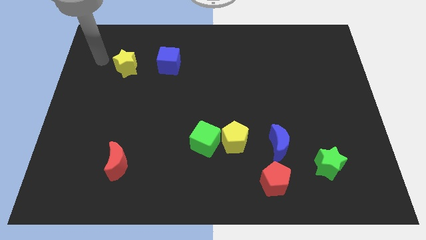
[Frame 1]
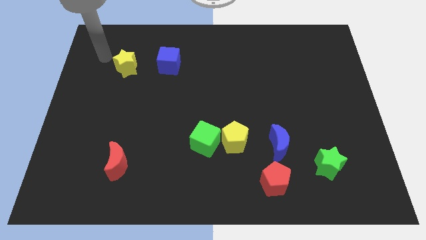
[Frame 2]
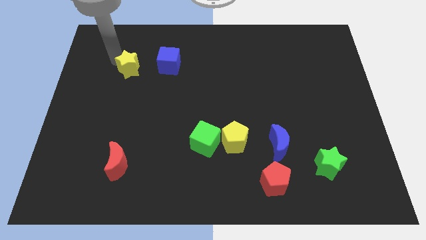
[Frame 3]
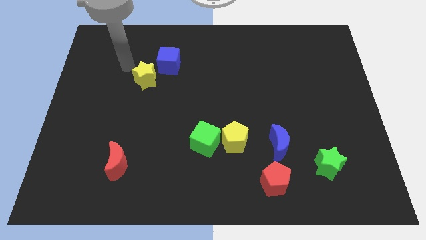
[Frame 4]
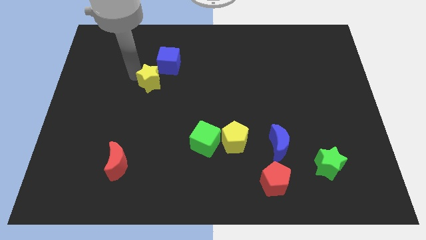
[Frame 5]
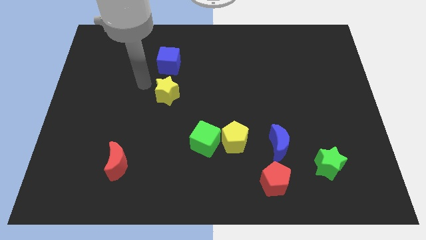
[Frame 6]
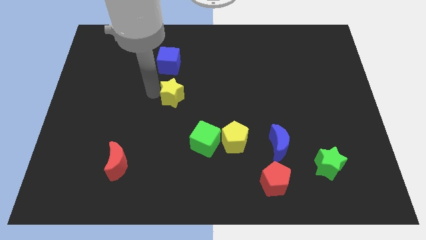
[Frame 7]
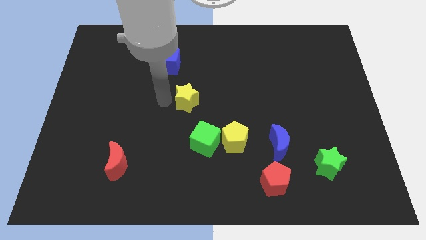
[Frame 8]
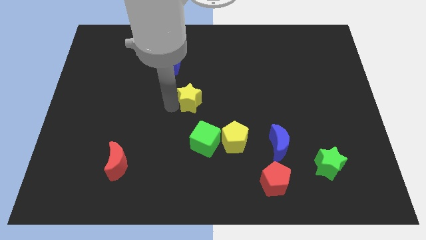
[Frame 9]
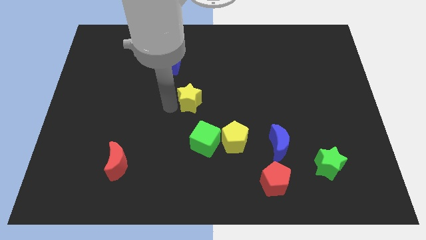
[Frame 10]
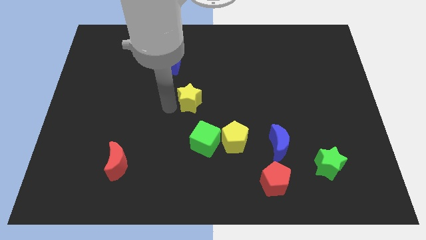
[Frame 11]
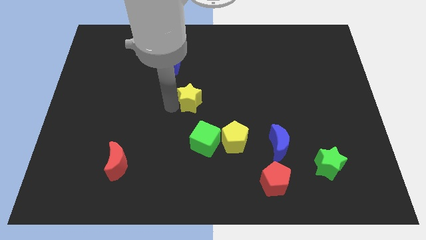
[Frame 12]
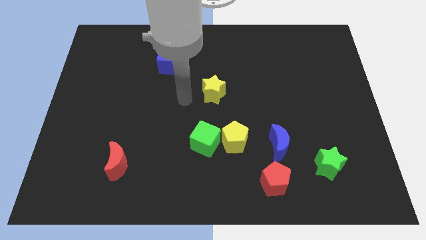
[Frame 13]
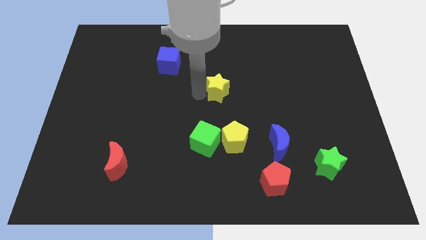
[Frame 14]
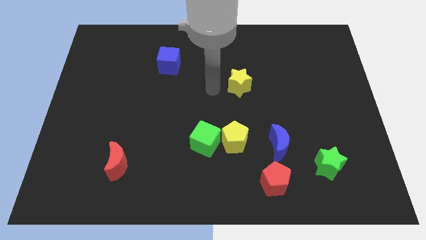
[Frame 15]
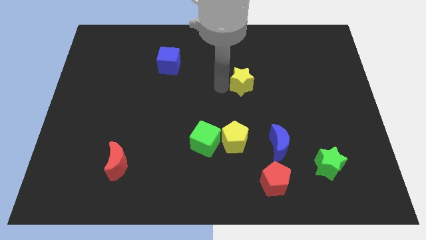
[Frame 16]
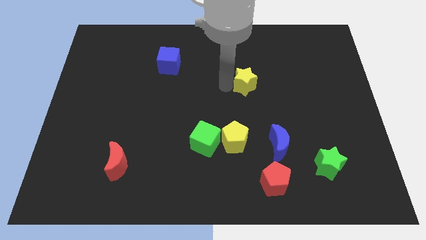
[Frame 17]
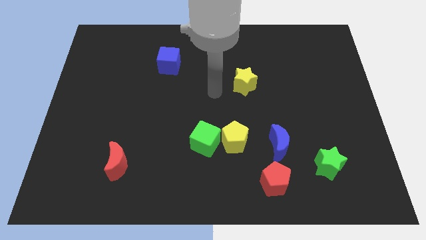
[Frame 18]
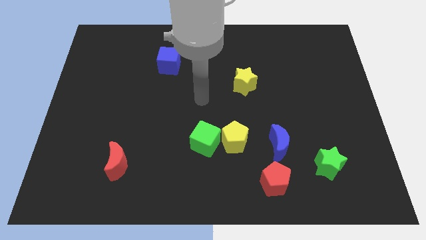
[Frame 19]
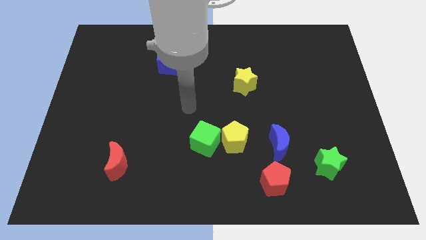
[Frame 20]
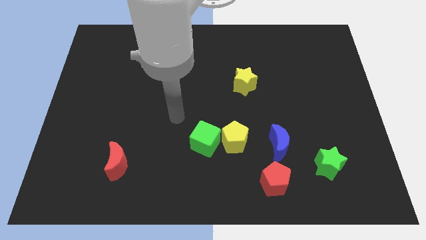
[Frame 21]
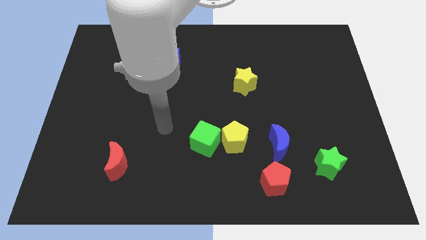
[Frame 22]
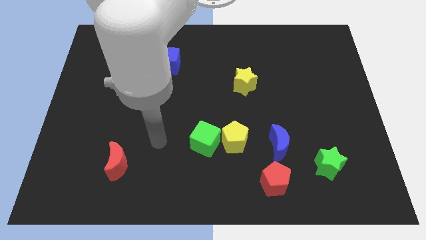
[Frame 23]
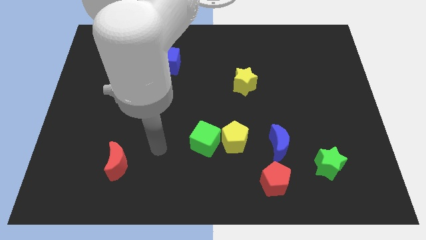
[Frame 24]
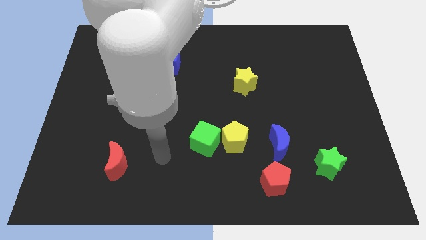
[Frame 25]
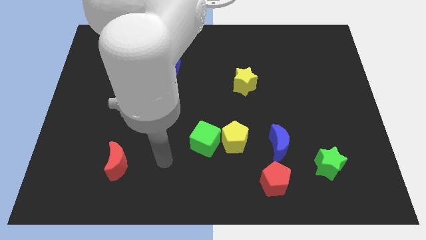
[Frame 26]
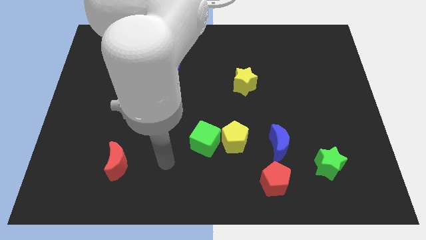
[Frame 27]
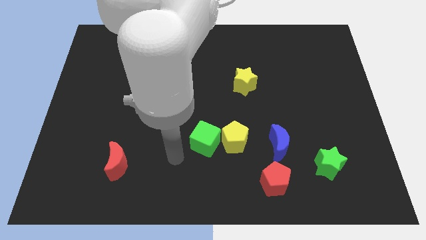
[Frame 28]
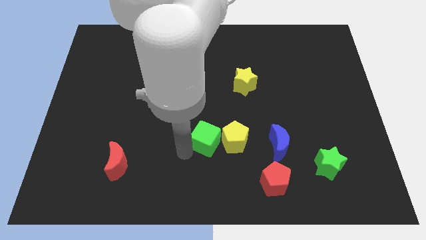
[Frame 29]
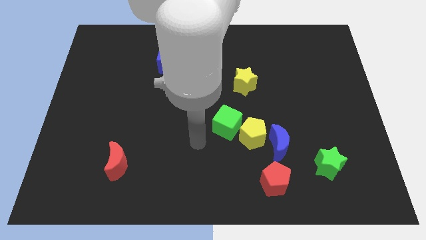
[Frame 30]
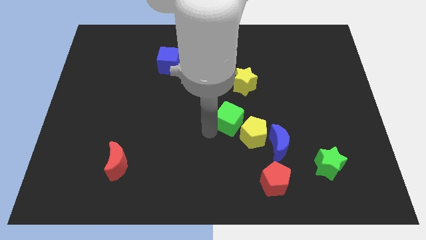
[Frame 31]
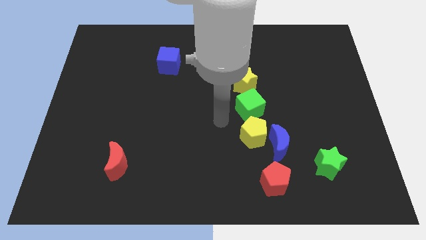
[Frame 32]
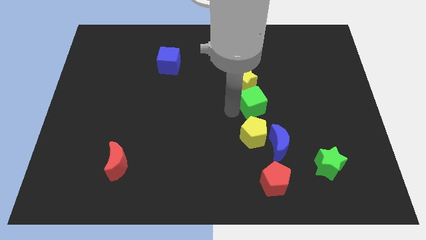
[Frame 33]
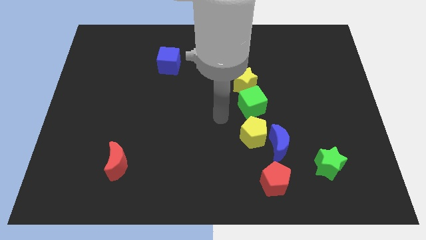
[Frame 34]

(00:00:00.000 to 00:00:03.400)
place green cube above yellow pentagon

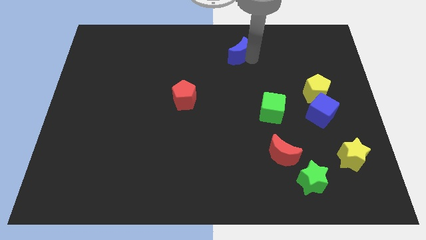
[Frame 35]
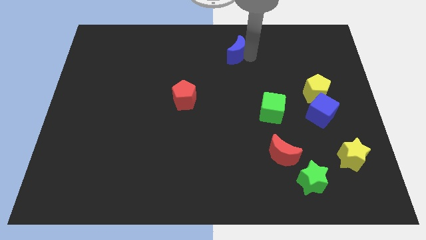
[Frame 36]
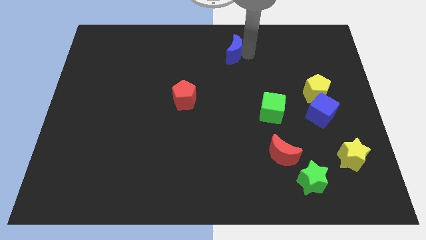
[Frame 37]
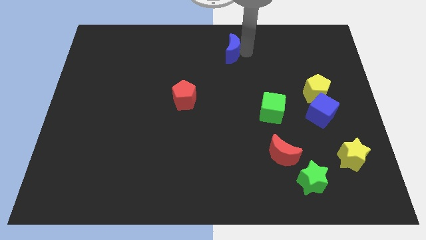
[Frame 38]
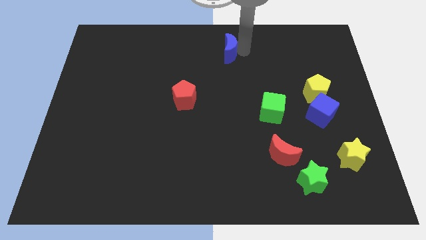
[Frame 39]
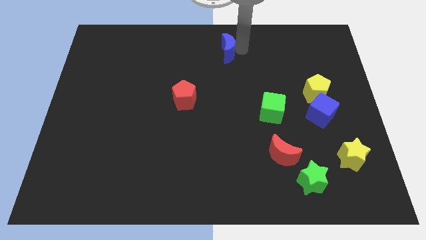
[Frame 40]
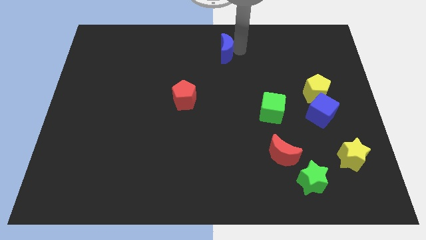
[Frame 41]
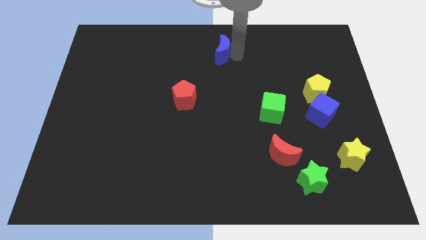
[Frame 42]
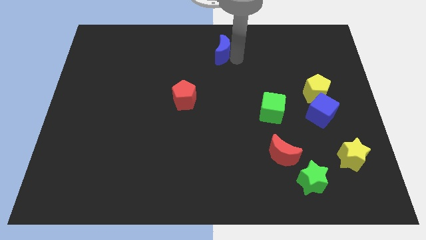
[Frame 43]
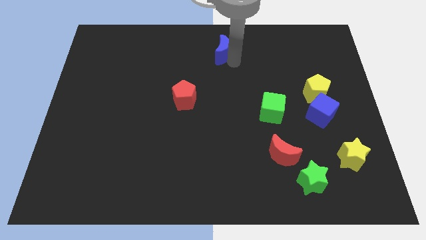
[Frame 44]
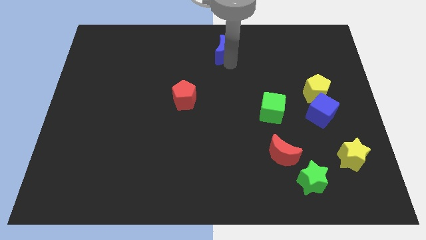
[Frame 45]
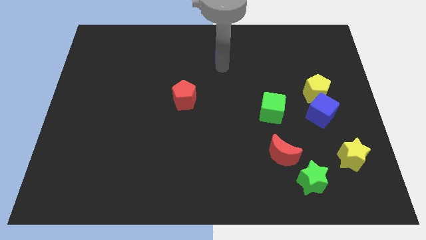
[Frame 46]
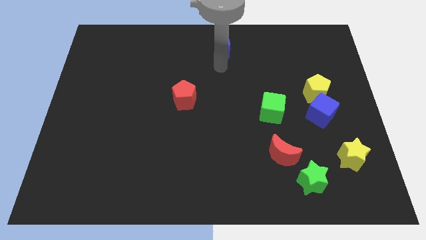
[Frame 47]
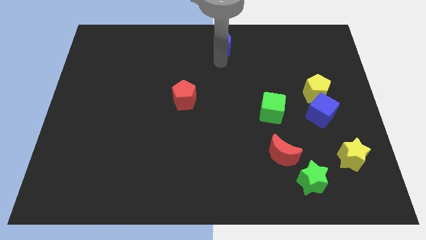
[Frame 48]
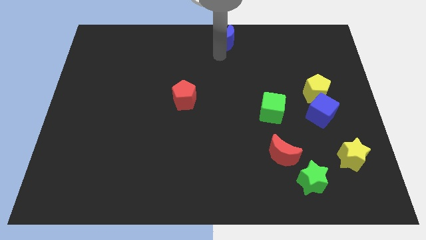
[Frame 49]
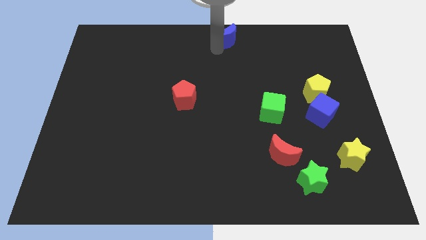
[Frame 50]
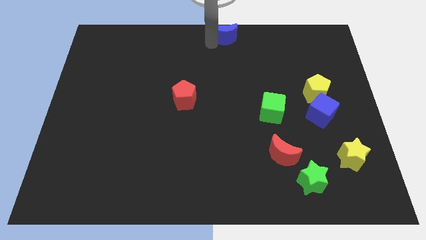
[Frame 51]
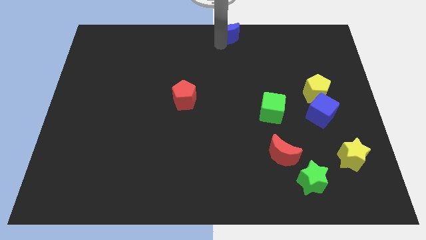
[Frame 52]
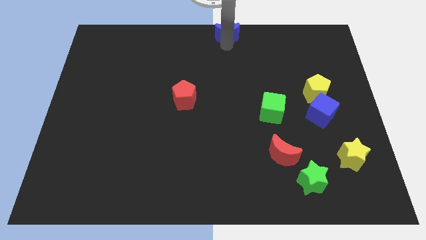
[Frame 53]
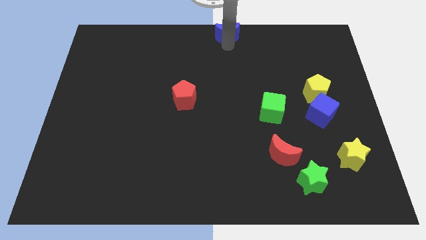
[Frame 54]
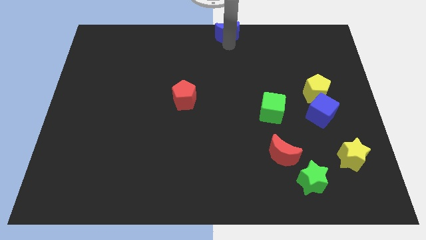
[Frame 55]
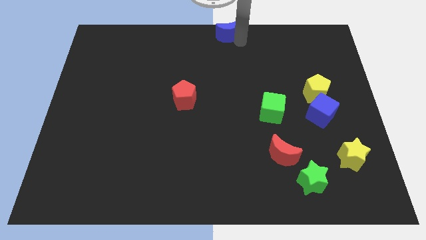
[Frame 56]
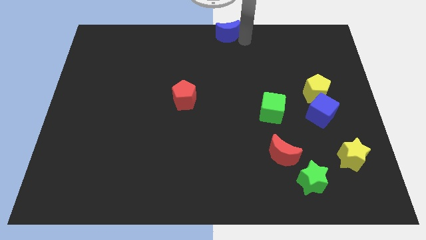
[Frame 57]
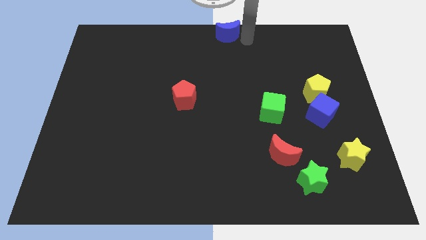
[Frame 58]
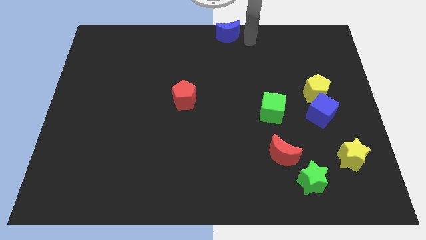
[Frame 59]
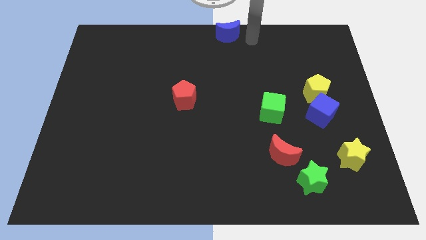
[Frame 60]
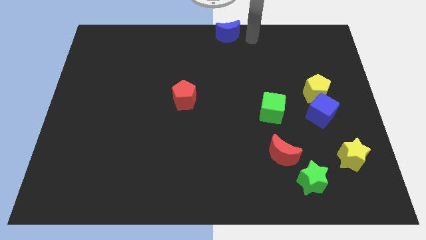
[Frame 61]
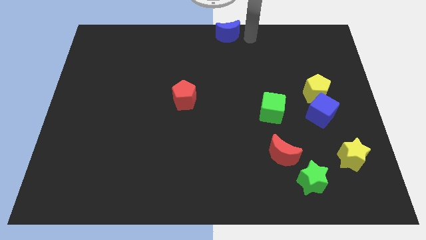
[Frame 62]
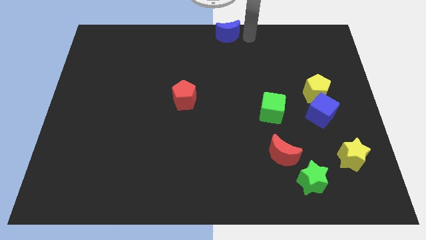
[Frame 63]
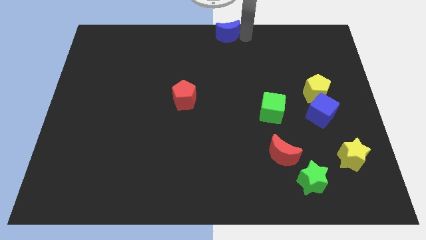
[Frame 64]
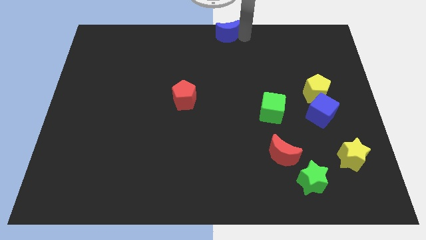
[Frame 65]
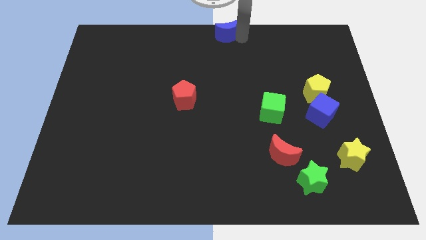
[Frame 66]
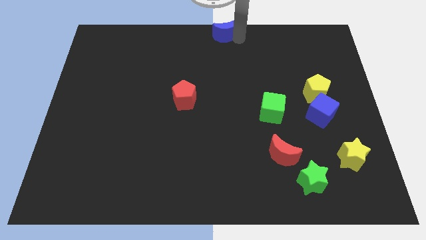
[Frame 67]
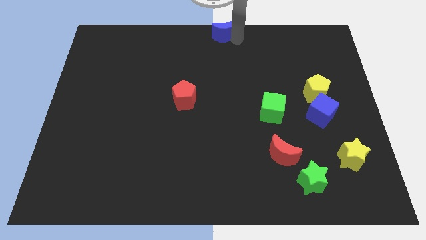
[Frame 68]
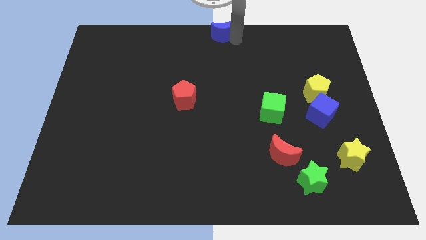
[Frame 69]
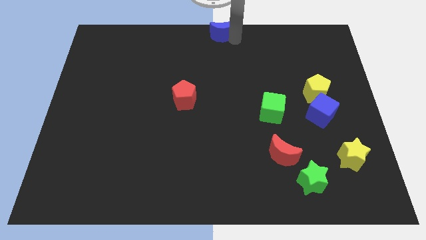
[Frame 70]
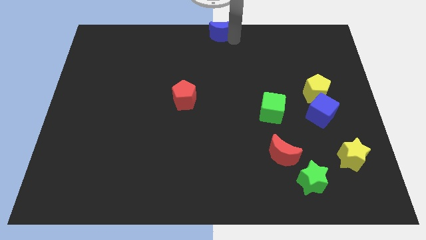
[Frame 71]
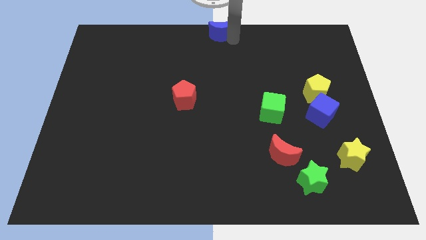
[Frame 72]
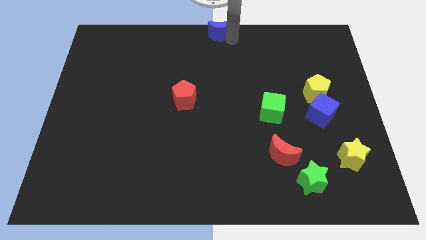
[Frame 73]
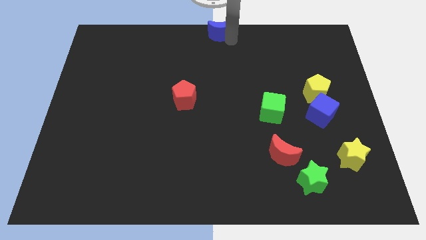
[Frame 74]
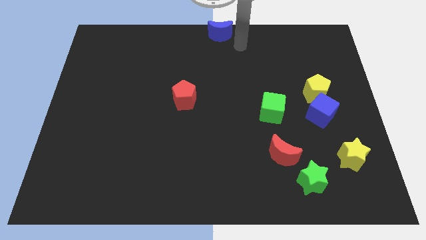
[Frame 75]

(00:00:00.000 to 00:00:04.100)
slide blue moon to the top center

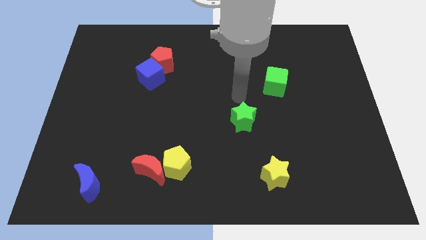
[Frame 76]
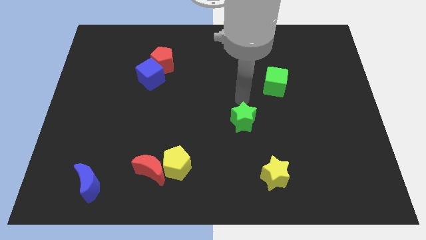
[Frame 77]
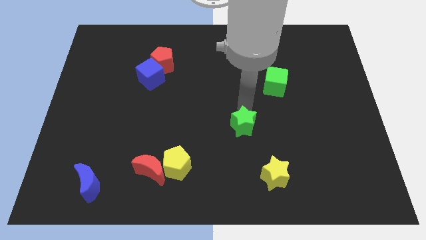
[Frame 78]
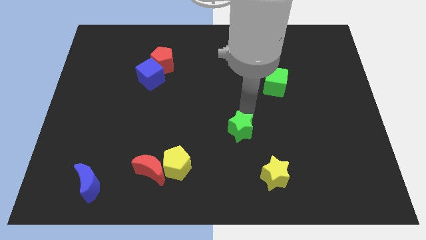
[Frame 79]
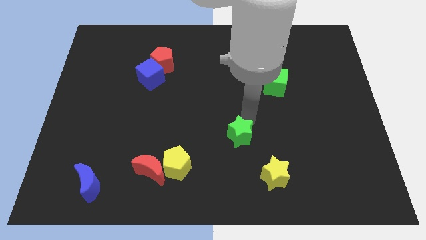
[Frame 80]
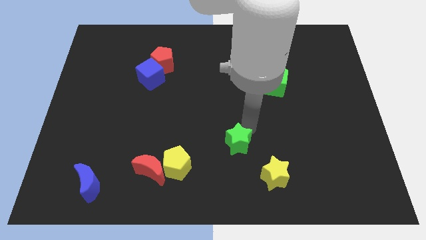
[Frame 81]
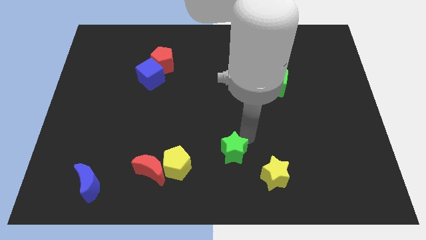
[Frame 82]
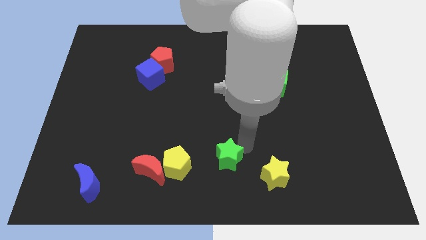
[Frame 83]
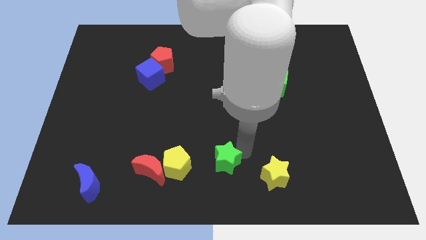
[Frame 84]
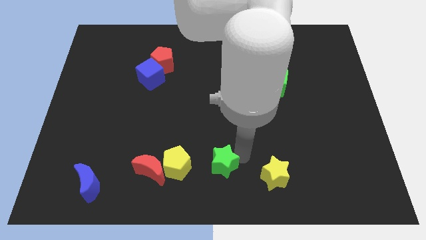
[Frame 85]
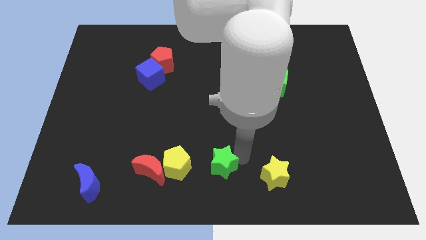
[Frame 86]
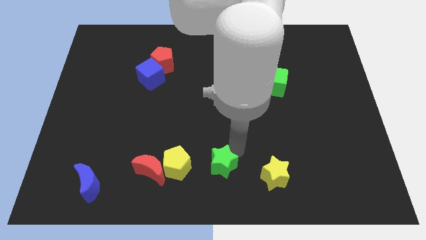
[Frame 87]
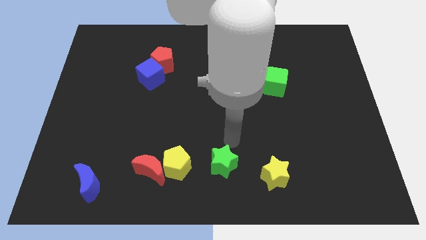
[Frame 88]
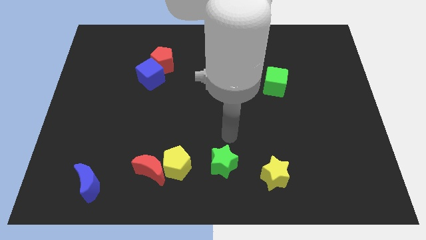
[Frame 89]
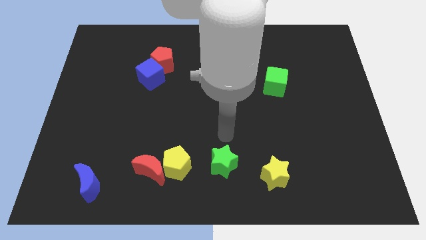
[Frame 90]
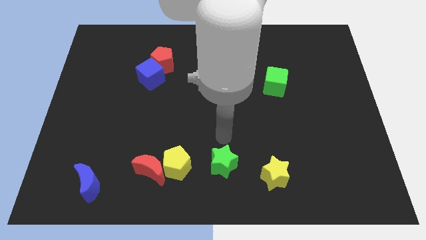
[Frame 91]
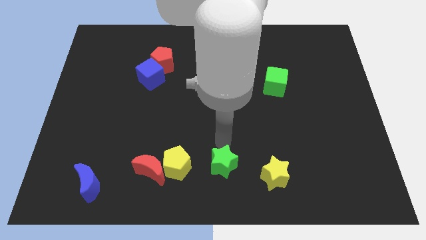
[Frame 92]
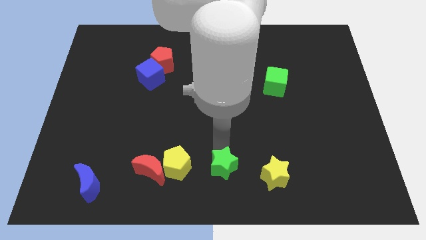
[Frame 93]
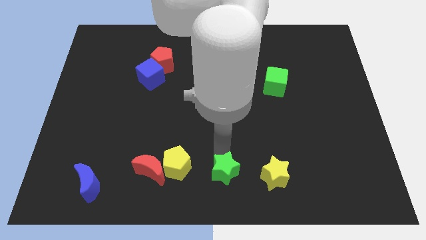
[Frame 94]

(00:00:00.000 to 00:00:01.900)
place the green star to the right of the yellow pentagon
